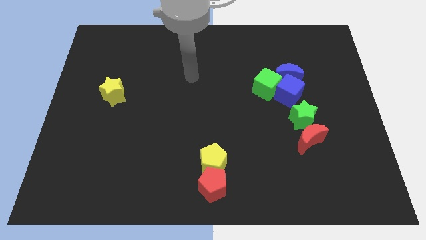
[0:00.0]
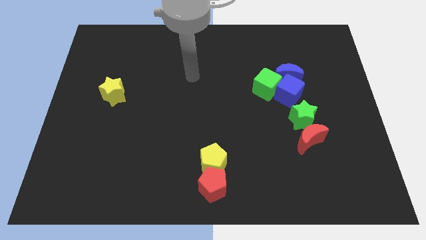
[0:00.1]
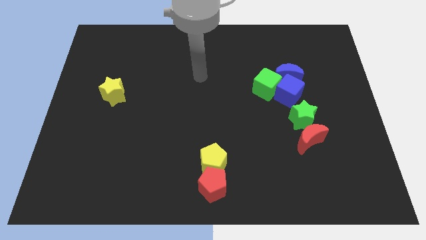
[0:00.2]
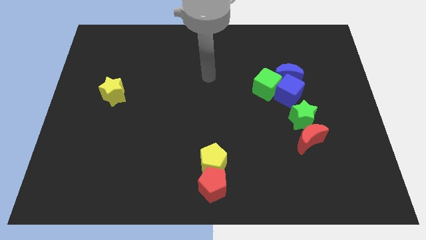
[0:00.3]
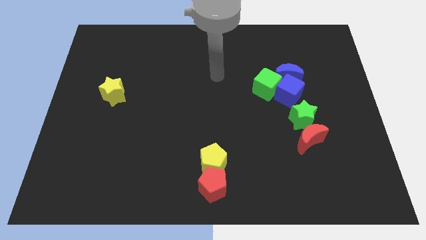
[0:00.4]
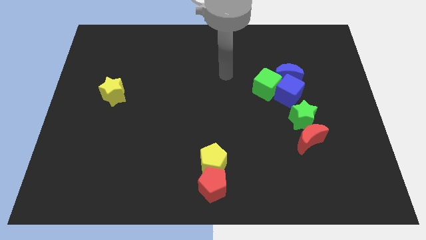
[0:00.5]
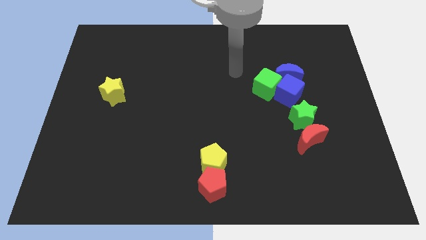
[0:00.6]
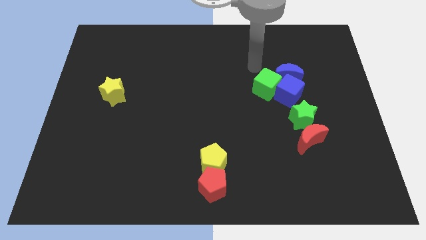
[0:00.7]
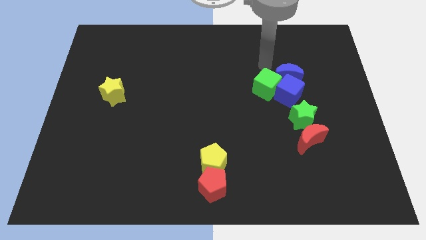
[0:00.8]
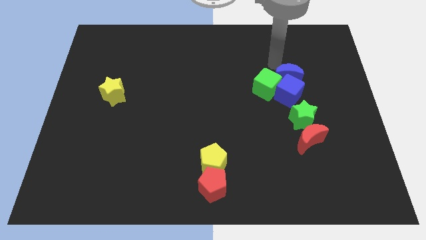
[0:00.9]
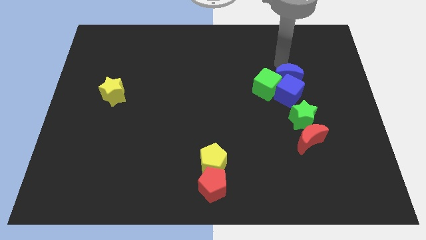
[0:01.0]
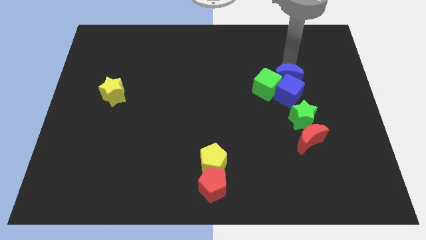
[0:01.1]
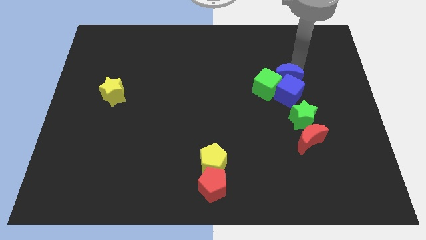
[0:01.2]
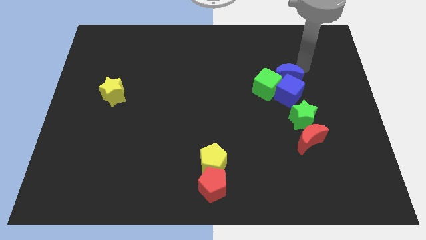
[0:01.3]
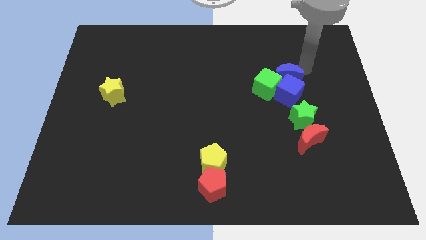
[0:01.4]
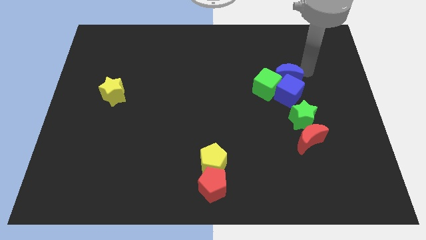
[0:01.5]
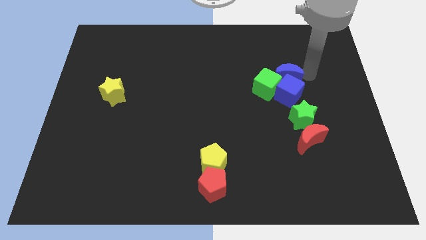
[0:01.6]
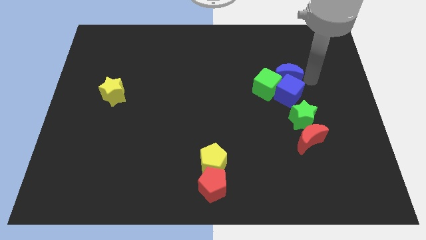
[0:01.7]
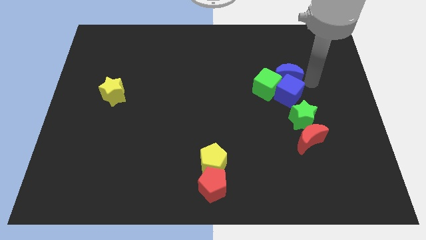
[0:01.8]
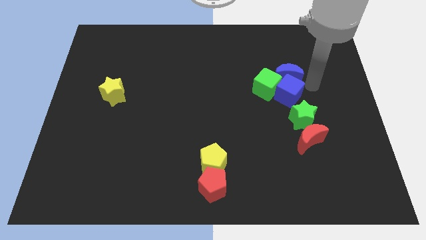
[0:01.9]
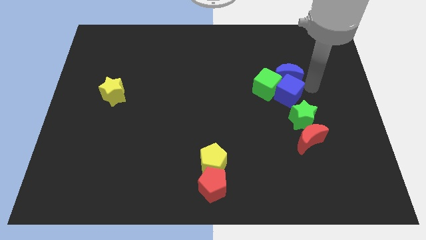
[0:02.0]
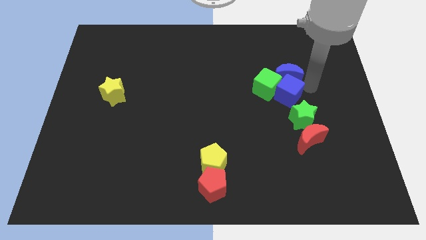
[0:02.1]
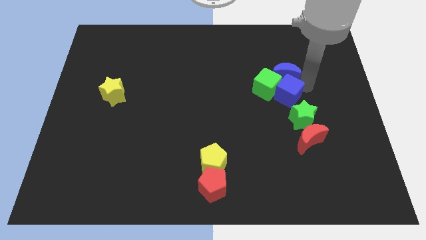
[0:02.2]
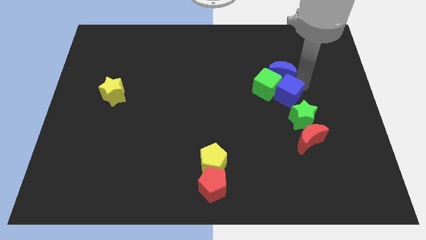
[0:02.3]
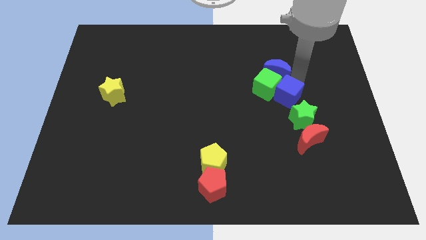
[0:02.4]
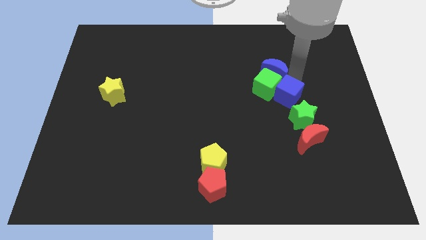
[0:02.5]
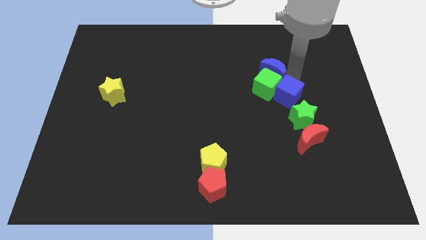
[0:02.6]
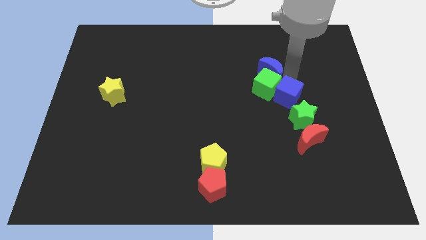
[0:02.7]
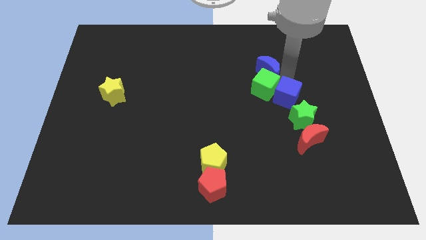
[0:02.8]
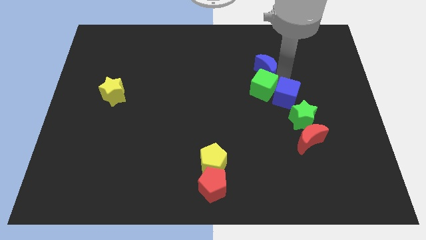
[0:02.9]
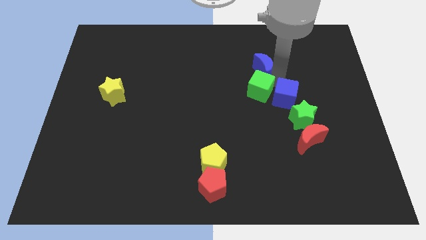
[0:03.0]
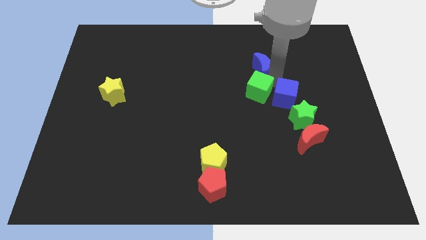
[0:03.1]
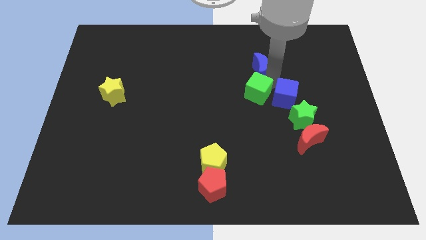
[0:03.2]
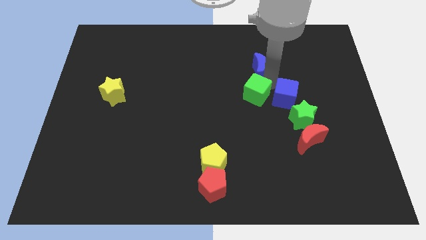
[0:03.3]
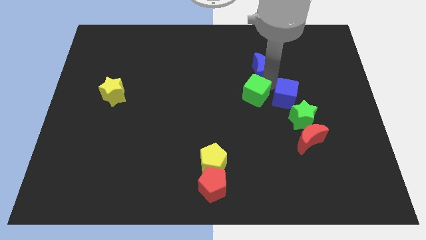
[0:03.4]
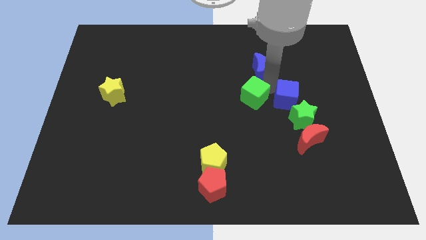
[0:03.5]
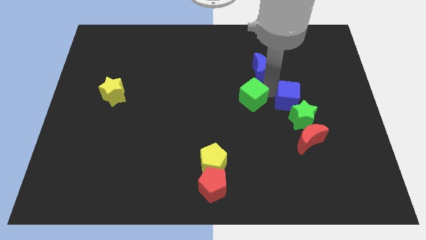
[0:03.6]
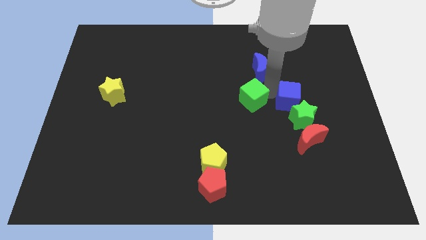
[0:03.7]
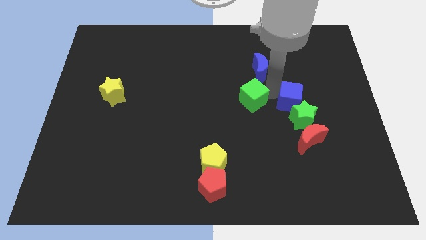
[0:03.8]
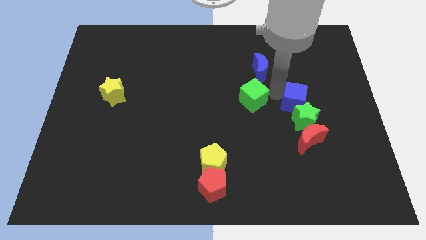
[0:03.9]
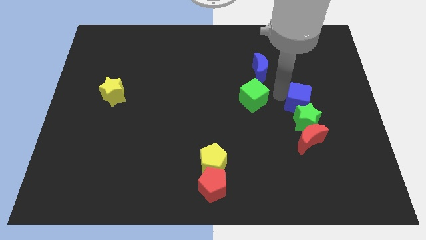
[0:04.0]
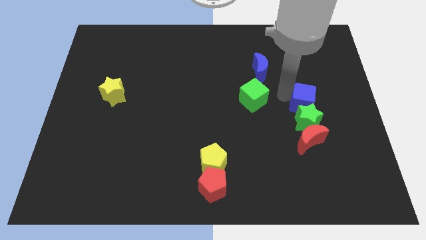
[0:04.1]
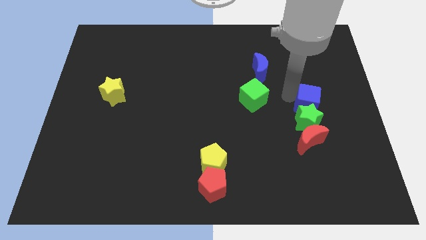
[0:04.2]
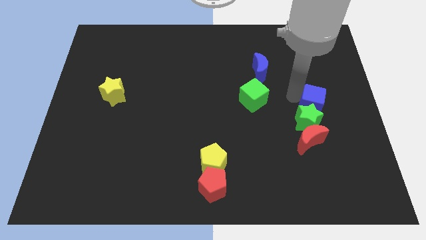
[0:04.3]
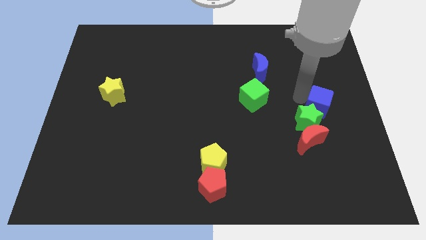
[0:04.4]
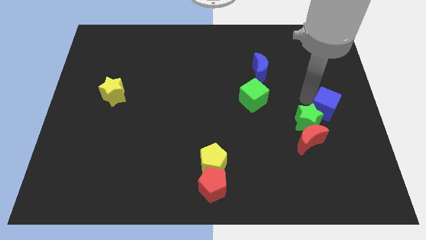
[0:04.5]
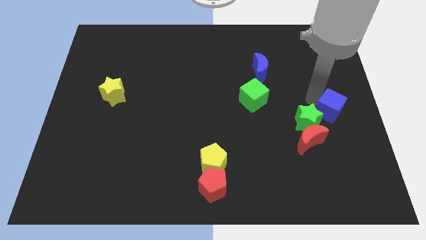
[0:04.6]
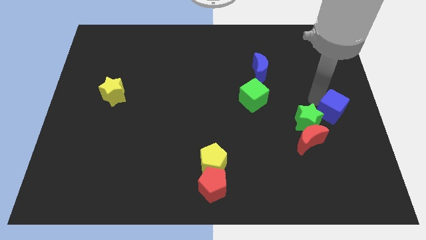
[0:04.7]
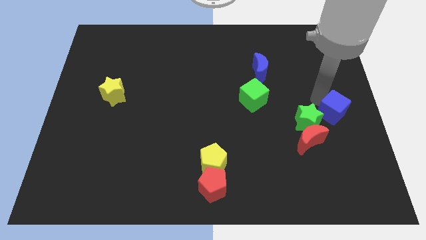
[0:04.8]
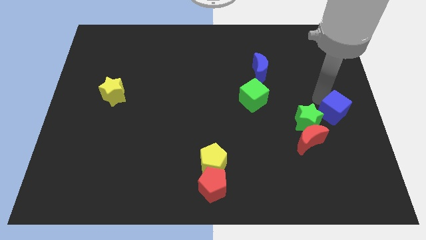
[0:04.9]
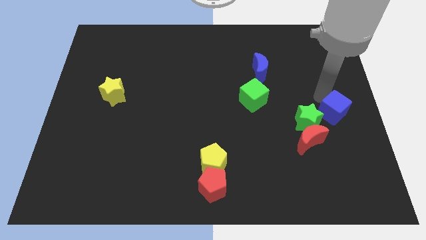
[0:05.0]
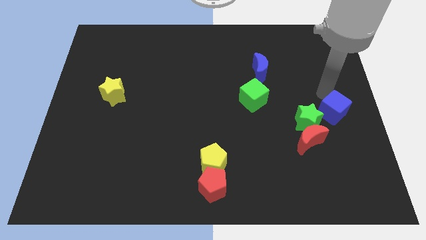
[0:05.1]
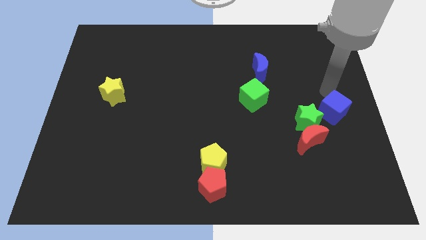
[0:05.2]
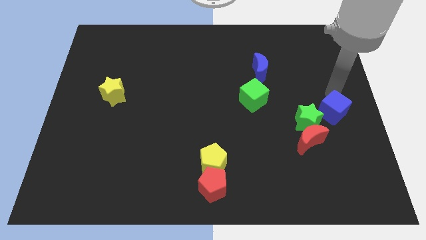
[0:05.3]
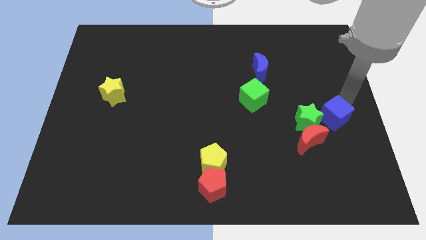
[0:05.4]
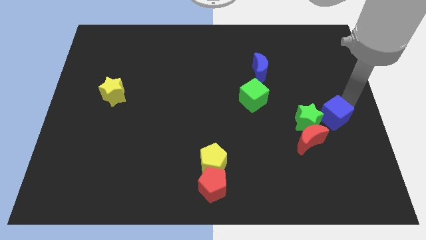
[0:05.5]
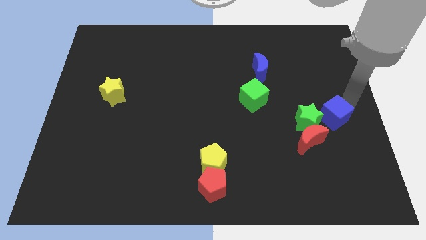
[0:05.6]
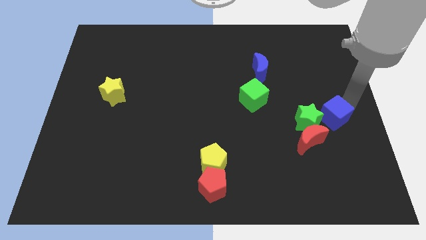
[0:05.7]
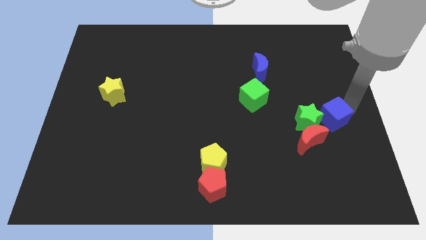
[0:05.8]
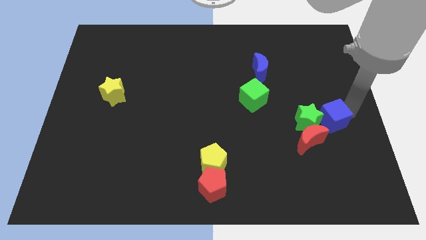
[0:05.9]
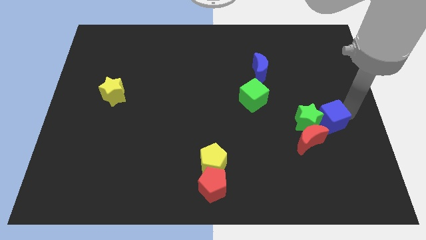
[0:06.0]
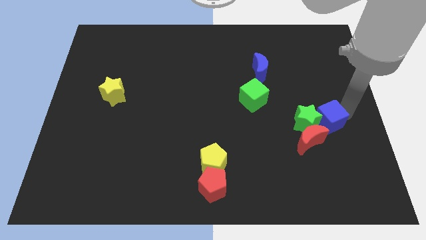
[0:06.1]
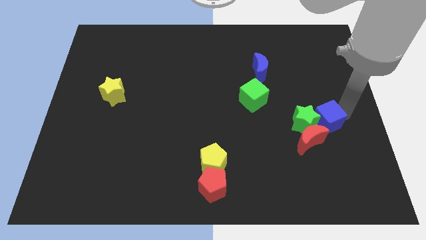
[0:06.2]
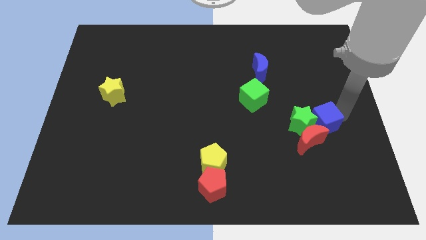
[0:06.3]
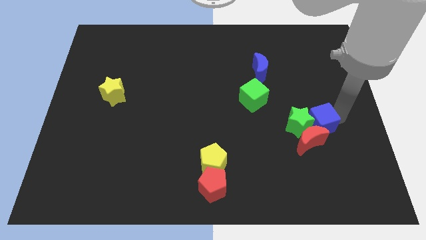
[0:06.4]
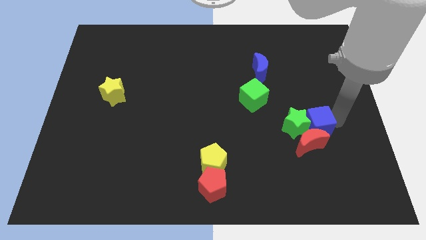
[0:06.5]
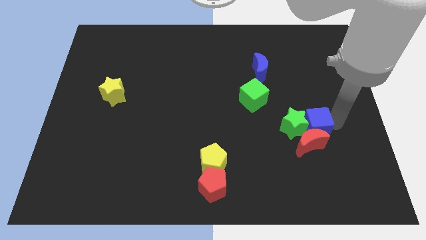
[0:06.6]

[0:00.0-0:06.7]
put the blue cube next to the red moon

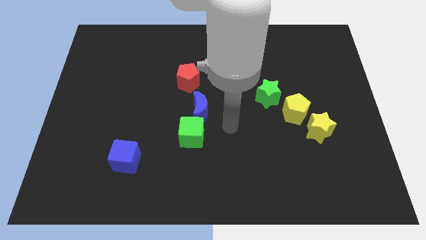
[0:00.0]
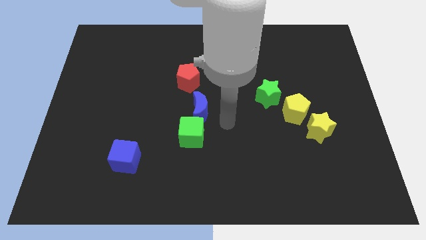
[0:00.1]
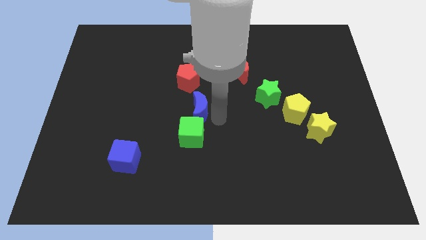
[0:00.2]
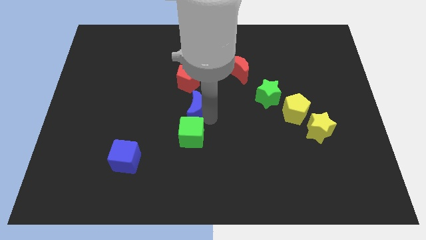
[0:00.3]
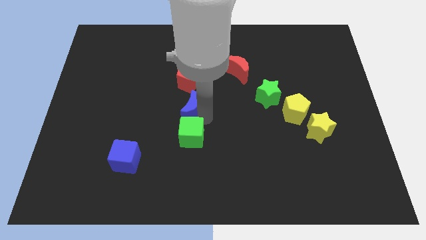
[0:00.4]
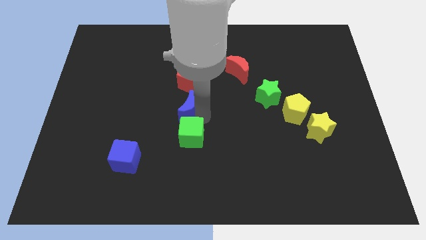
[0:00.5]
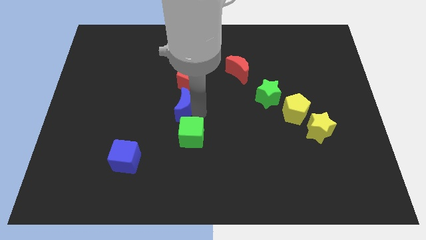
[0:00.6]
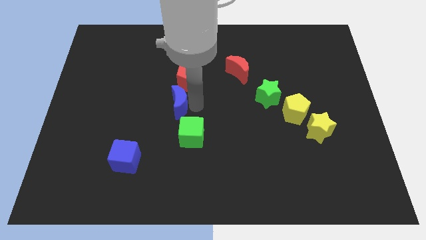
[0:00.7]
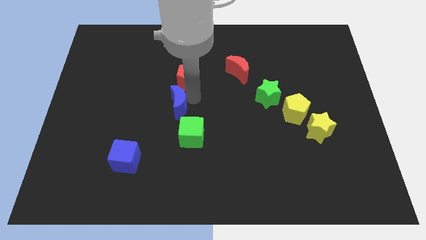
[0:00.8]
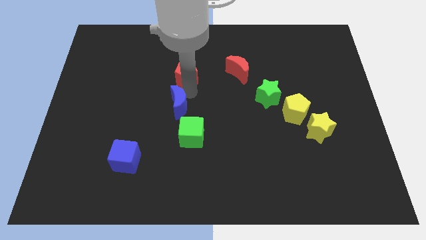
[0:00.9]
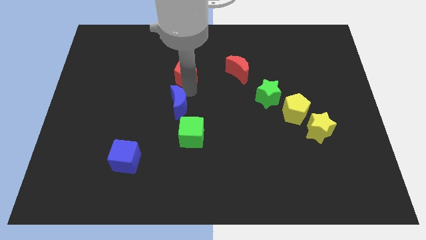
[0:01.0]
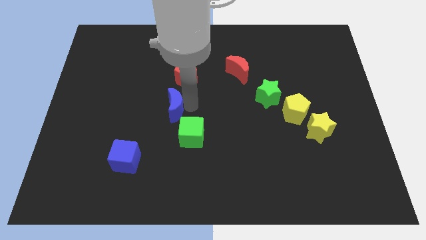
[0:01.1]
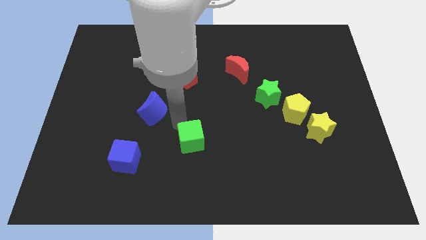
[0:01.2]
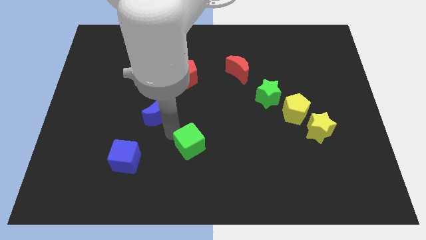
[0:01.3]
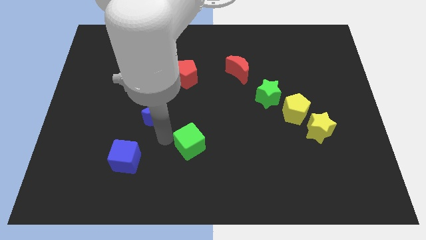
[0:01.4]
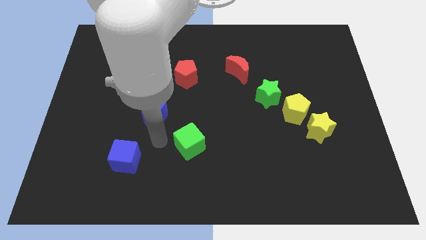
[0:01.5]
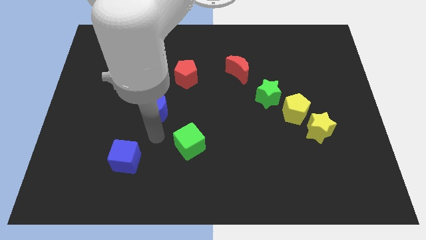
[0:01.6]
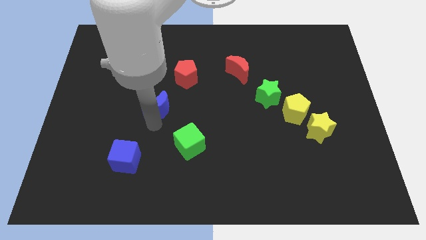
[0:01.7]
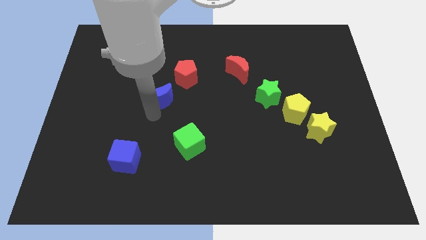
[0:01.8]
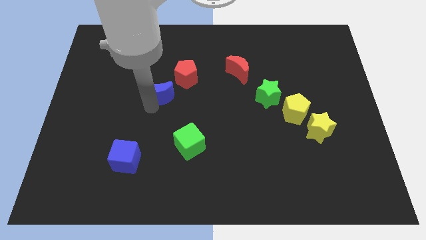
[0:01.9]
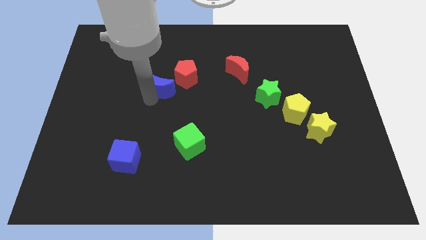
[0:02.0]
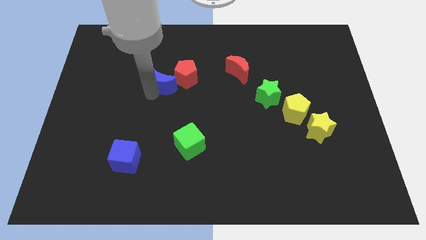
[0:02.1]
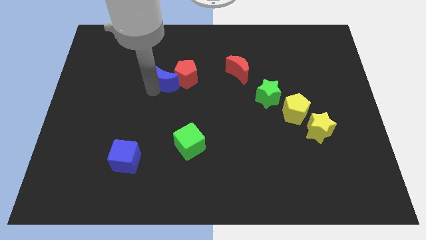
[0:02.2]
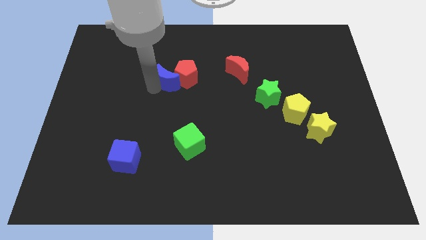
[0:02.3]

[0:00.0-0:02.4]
put the blue moon to the red pentagon
